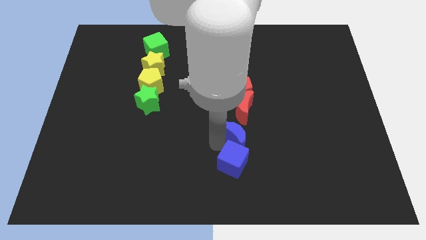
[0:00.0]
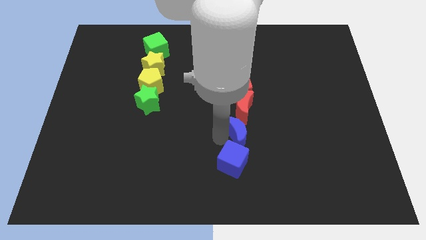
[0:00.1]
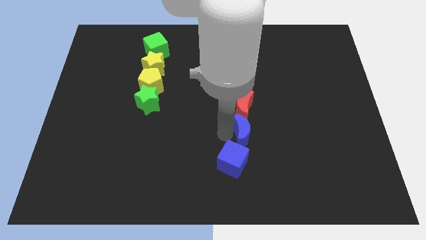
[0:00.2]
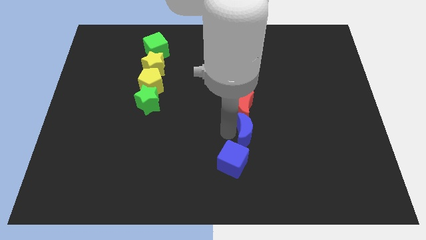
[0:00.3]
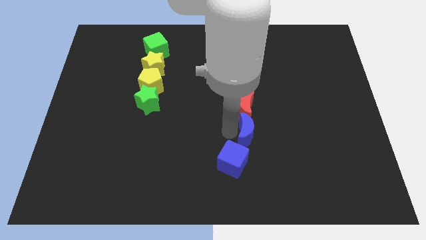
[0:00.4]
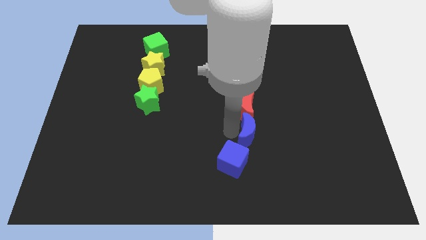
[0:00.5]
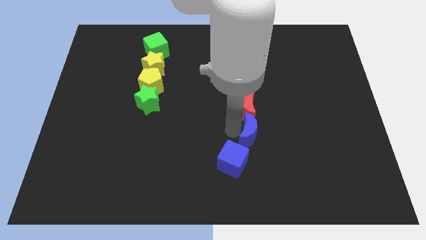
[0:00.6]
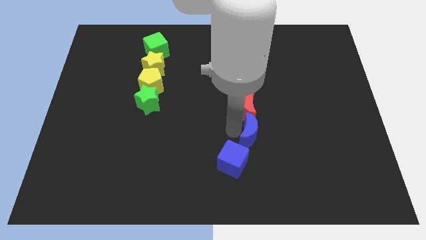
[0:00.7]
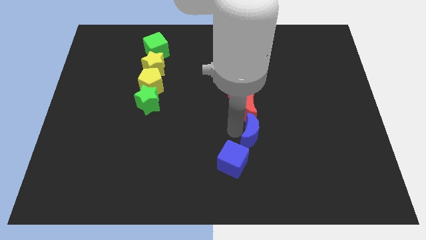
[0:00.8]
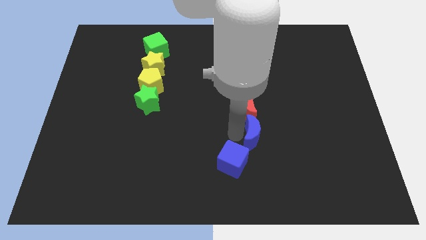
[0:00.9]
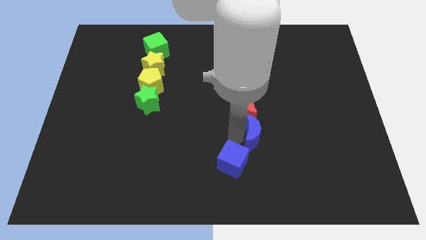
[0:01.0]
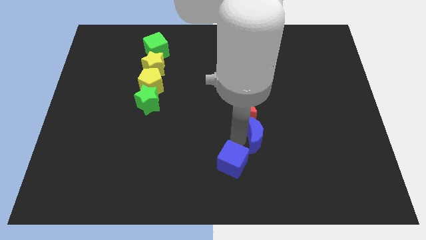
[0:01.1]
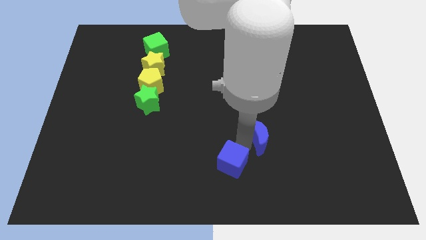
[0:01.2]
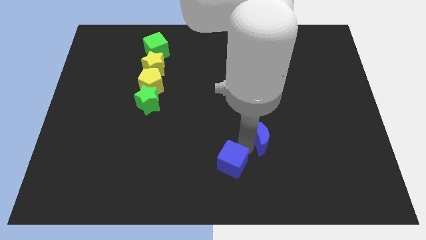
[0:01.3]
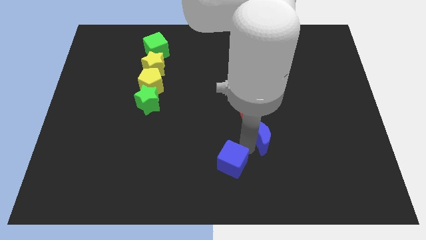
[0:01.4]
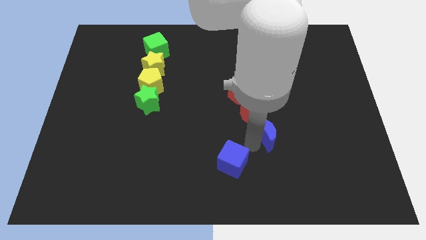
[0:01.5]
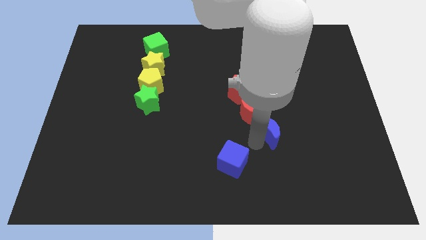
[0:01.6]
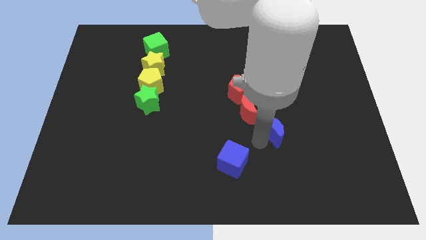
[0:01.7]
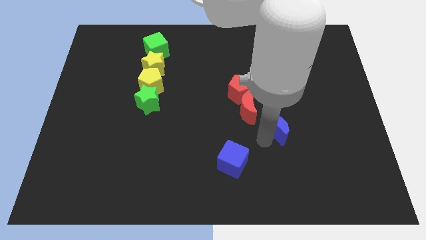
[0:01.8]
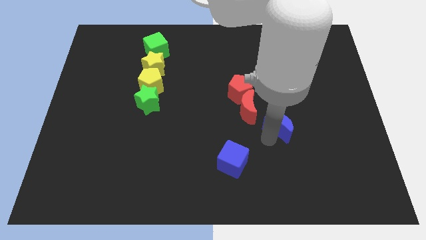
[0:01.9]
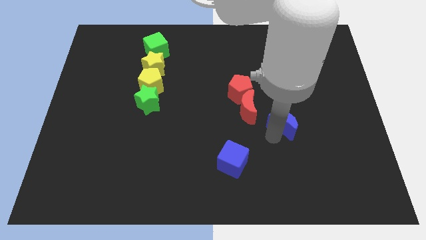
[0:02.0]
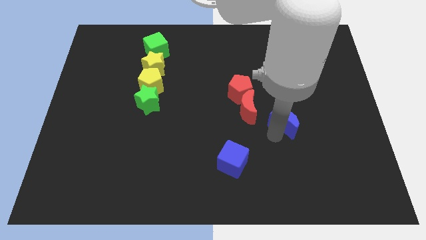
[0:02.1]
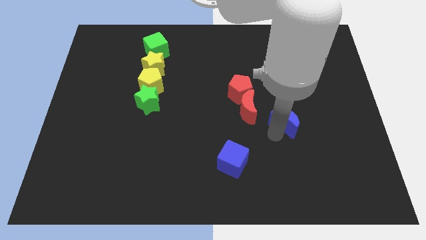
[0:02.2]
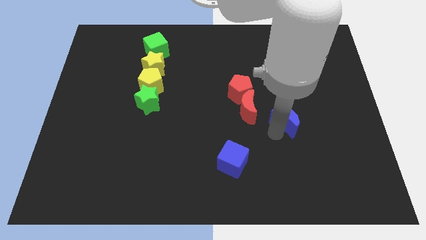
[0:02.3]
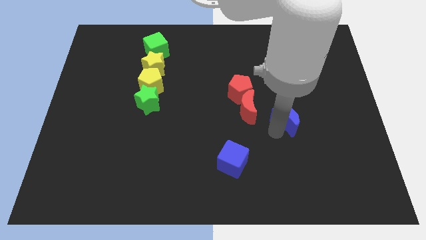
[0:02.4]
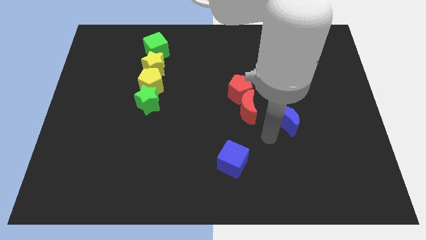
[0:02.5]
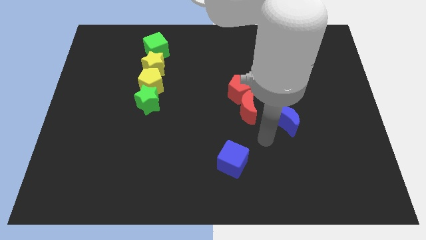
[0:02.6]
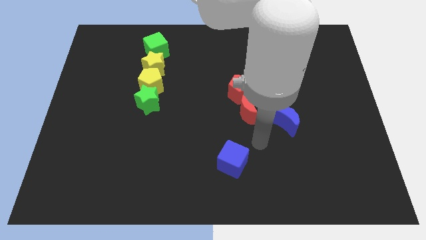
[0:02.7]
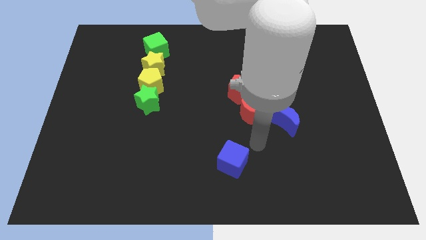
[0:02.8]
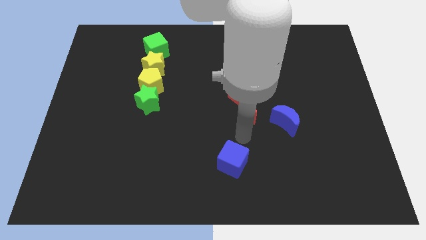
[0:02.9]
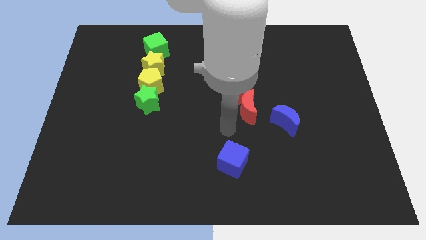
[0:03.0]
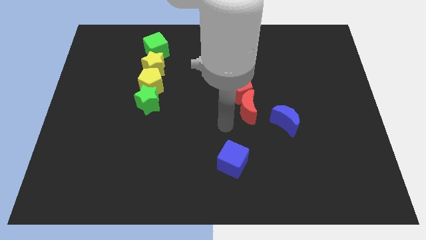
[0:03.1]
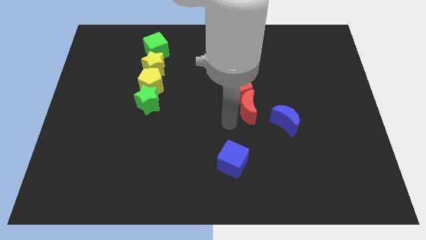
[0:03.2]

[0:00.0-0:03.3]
move the blue moon to the right side of the red moon

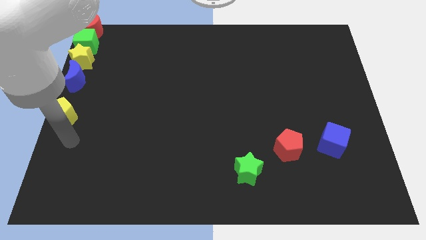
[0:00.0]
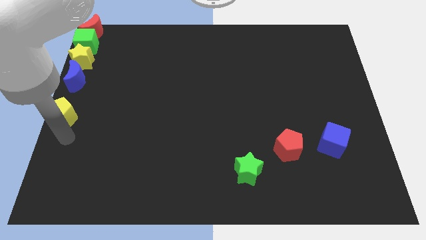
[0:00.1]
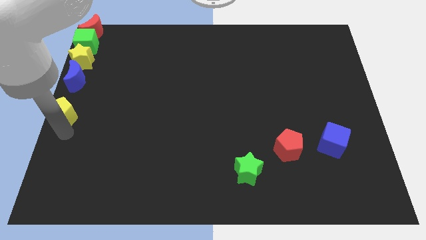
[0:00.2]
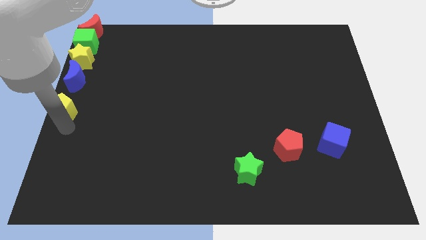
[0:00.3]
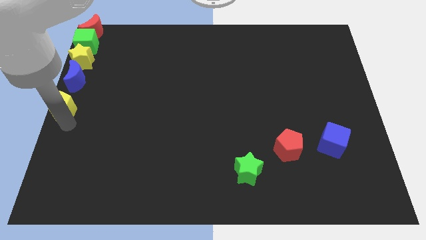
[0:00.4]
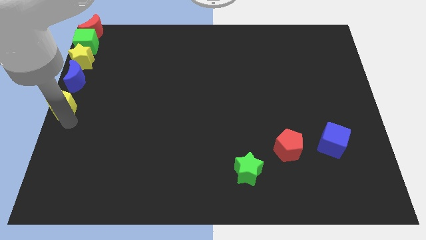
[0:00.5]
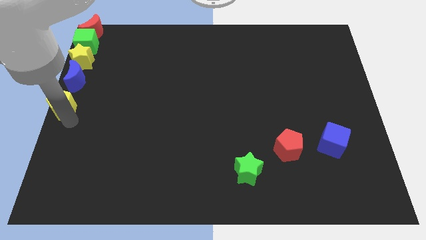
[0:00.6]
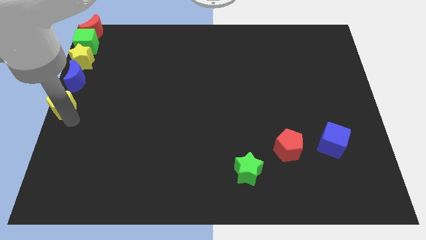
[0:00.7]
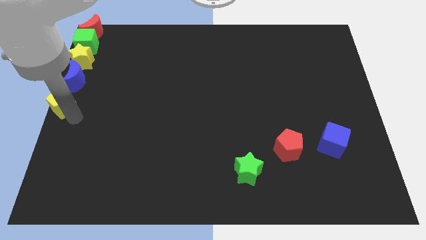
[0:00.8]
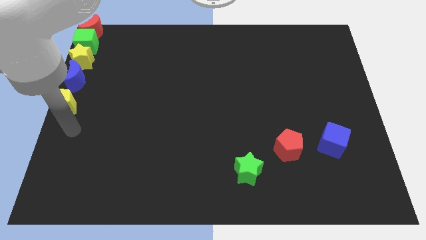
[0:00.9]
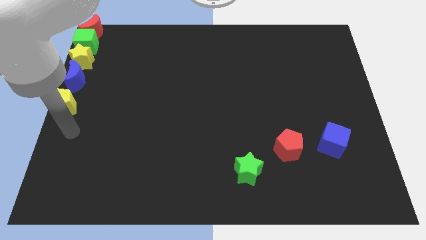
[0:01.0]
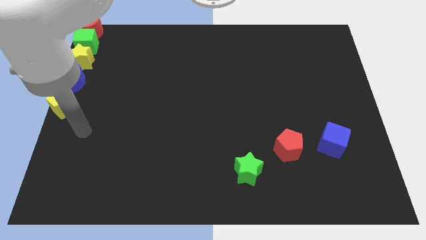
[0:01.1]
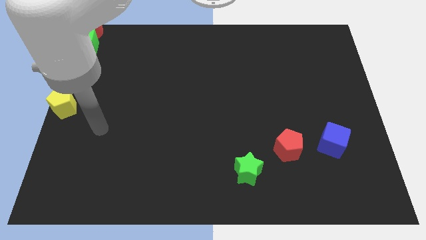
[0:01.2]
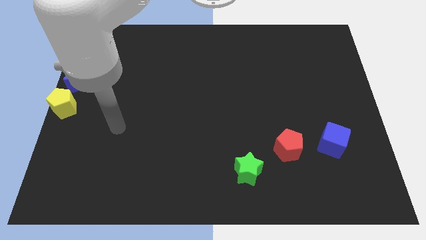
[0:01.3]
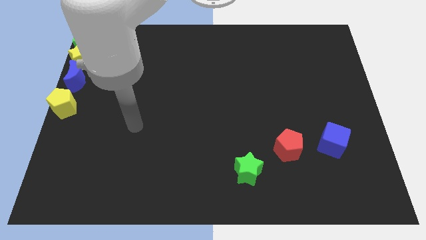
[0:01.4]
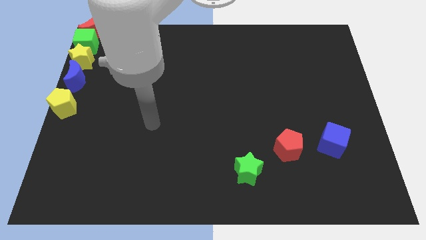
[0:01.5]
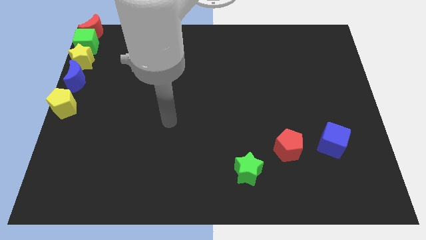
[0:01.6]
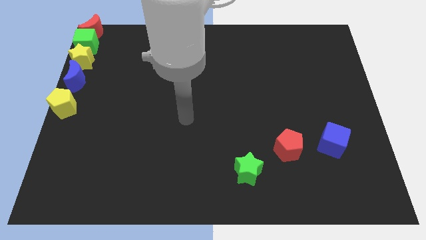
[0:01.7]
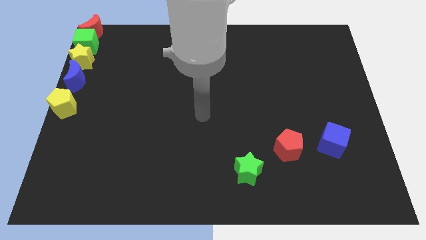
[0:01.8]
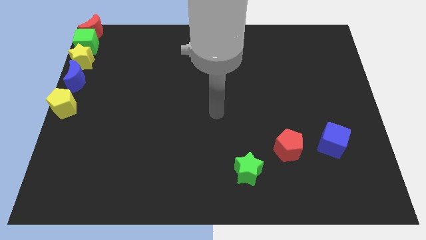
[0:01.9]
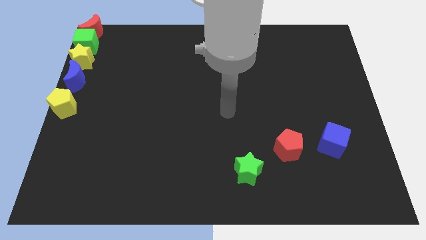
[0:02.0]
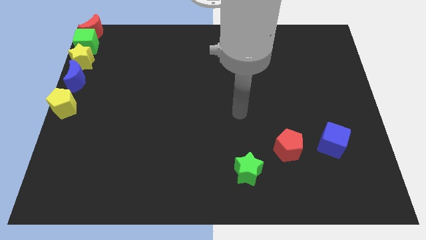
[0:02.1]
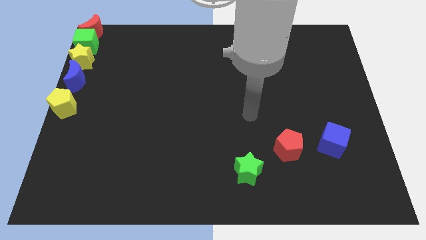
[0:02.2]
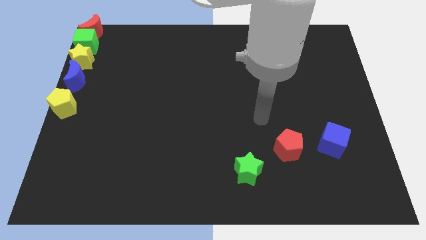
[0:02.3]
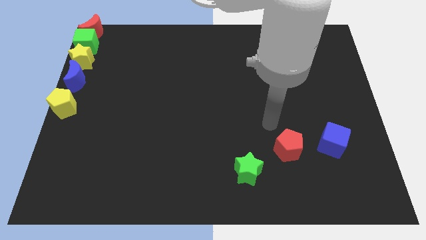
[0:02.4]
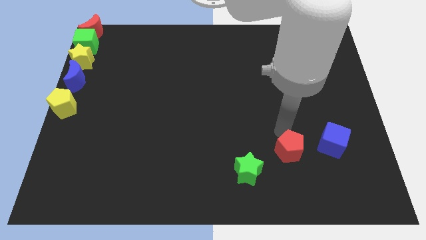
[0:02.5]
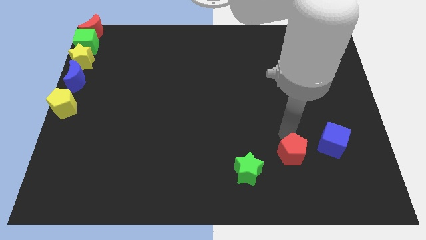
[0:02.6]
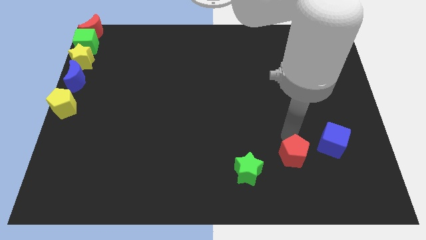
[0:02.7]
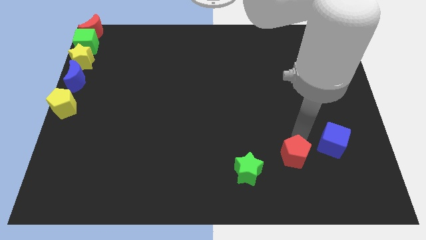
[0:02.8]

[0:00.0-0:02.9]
place the arm above the red pentagon

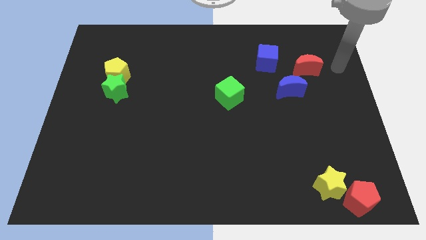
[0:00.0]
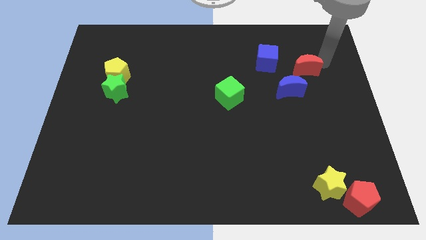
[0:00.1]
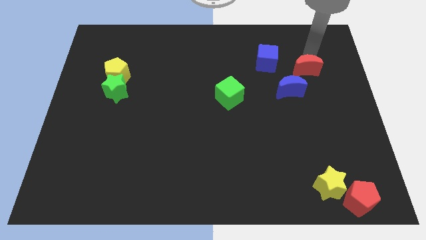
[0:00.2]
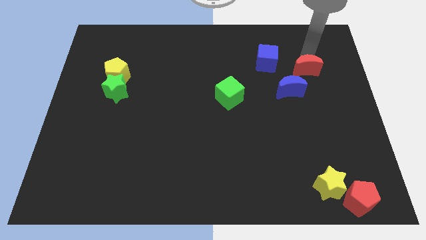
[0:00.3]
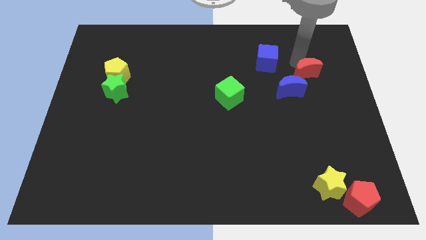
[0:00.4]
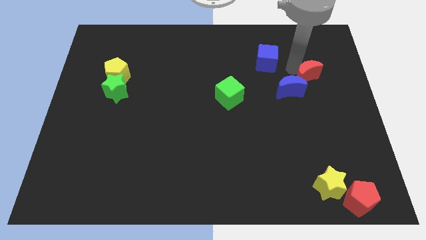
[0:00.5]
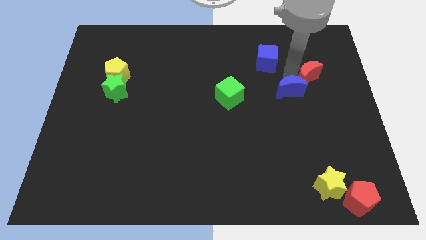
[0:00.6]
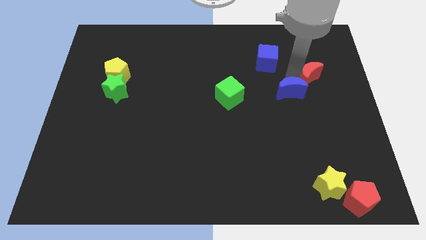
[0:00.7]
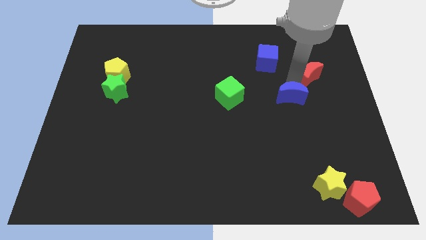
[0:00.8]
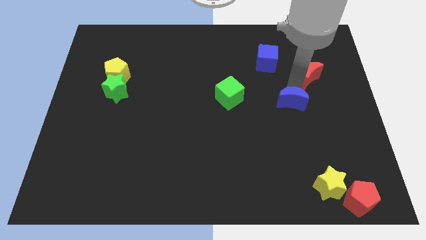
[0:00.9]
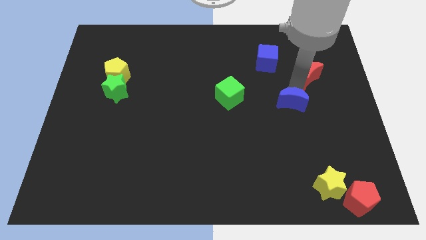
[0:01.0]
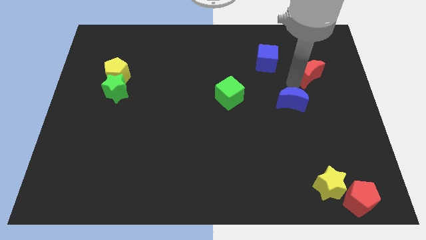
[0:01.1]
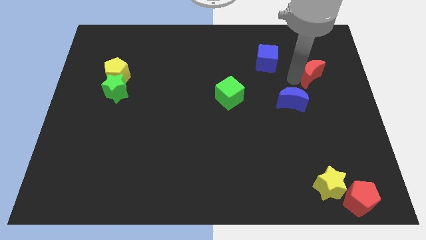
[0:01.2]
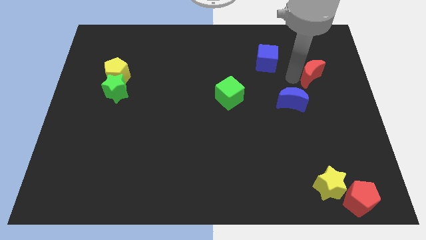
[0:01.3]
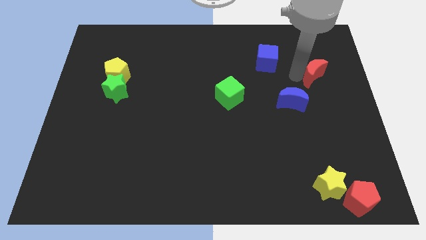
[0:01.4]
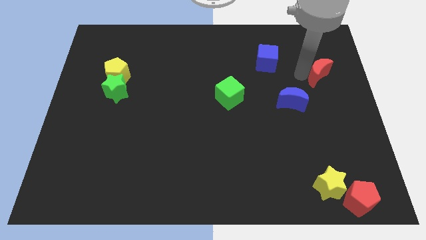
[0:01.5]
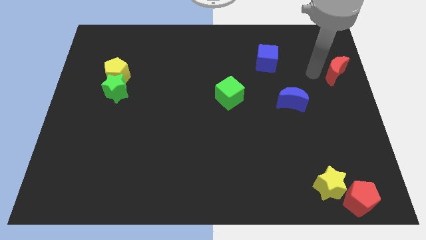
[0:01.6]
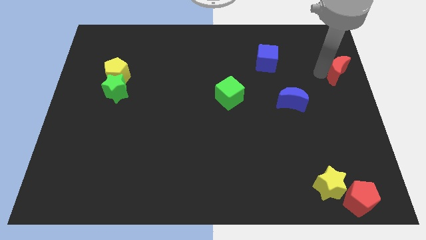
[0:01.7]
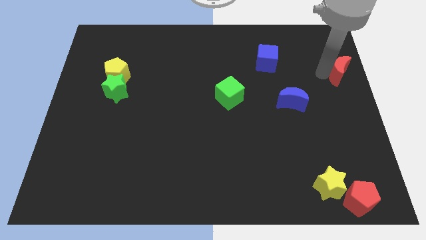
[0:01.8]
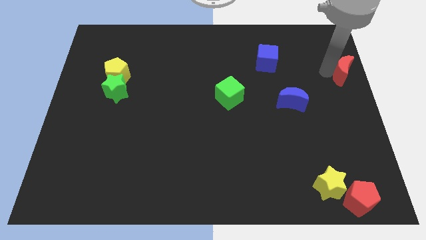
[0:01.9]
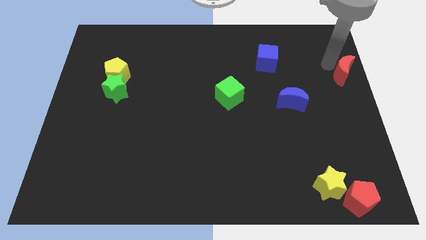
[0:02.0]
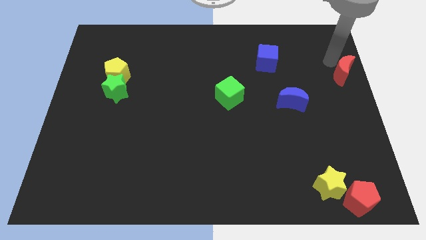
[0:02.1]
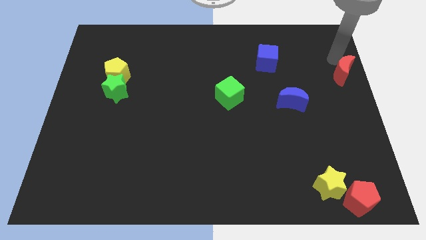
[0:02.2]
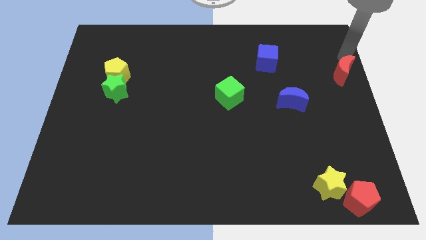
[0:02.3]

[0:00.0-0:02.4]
move the red moon to the center right

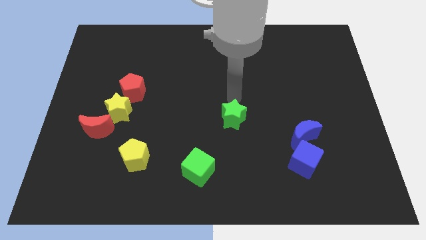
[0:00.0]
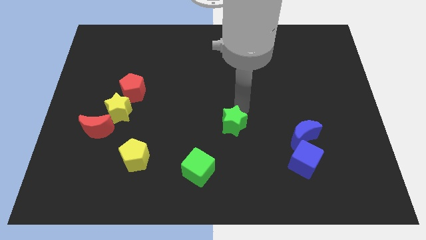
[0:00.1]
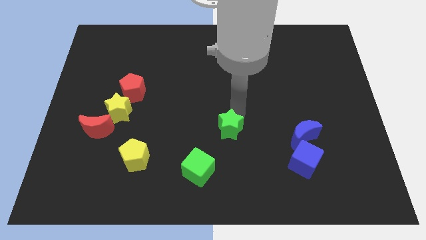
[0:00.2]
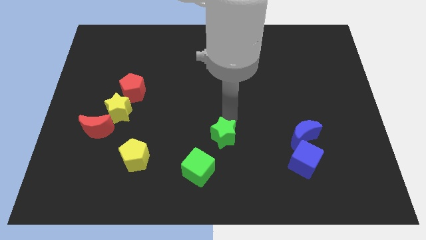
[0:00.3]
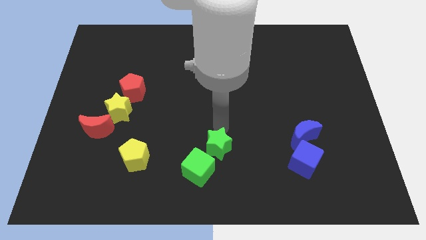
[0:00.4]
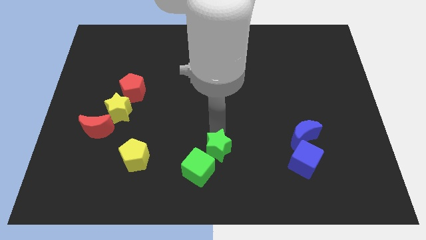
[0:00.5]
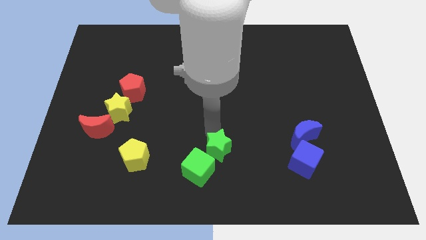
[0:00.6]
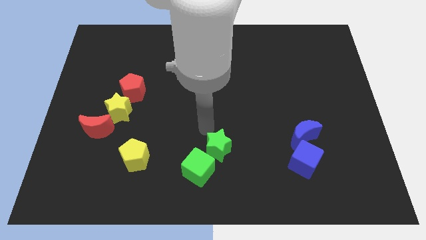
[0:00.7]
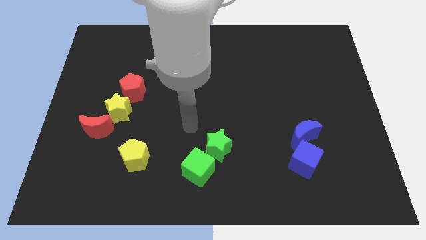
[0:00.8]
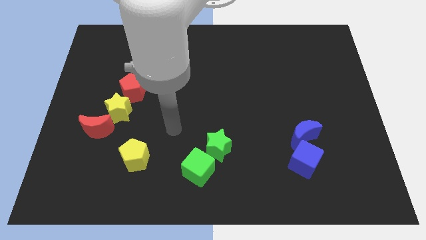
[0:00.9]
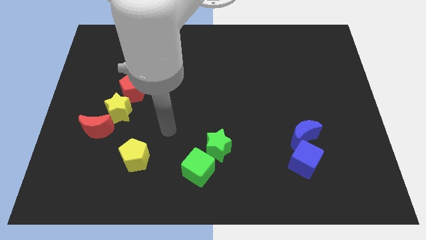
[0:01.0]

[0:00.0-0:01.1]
place green star to the top of the green cube
